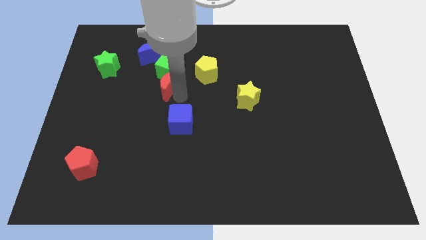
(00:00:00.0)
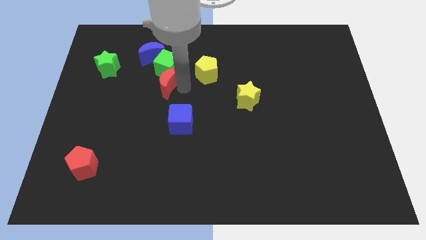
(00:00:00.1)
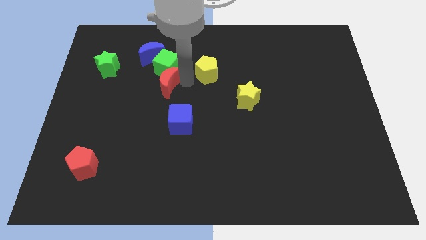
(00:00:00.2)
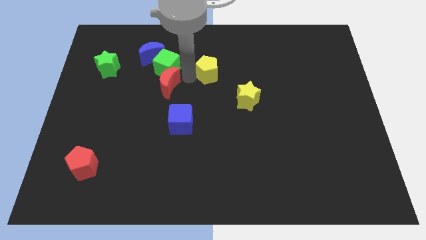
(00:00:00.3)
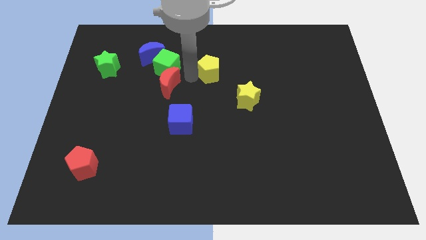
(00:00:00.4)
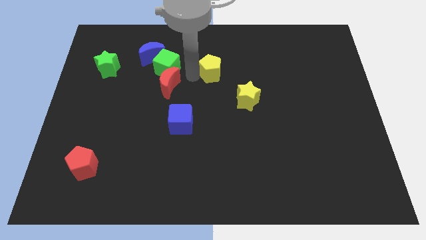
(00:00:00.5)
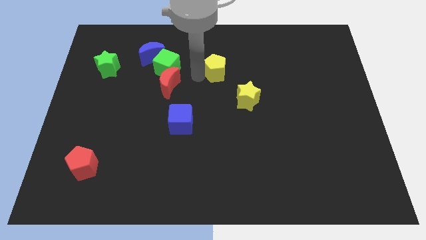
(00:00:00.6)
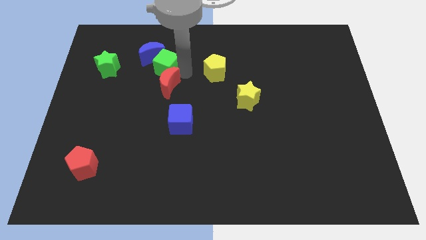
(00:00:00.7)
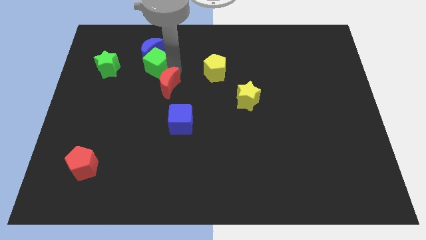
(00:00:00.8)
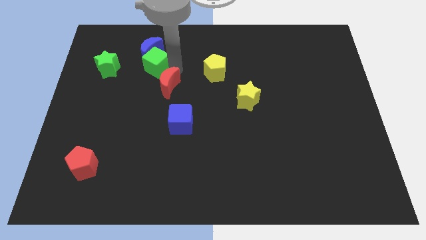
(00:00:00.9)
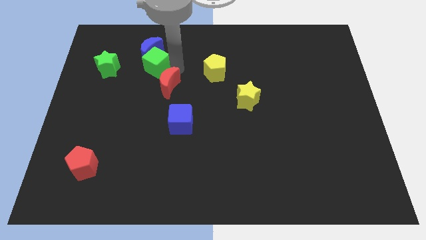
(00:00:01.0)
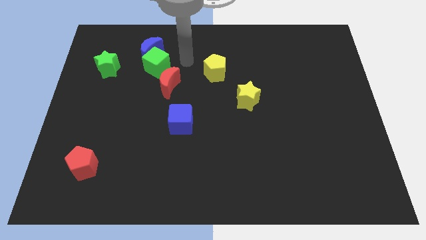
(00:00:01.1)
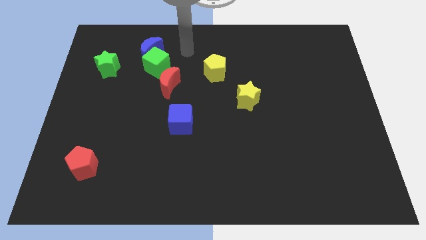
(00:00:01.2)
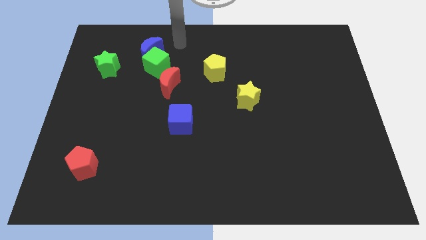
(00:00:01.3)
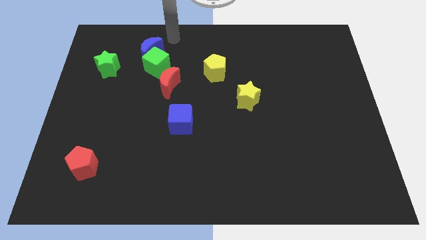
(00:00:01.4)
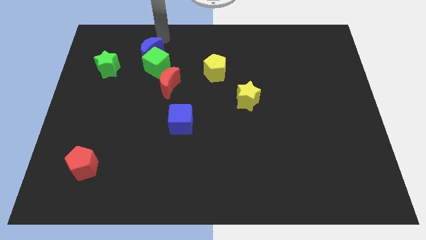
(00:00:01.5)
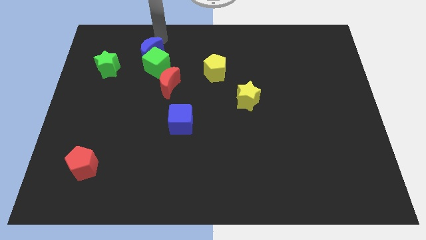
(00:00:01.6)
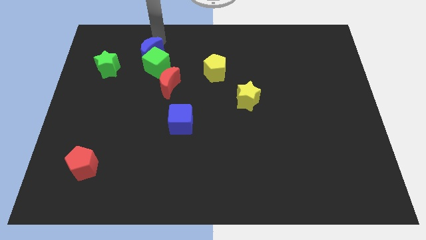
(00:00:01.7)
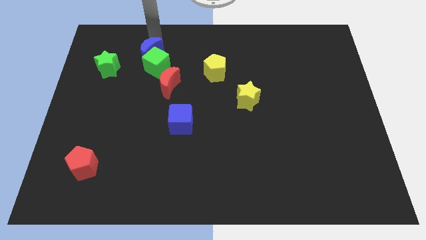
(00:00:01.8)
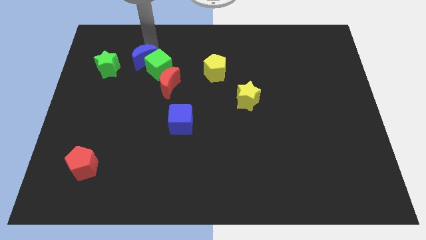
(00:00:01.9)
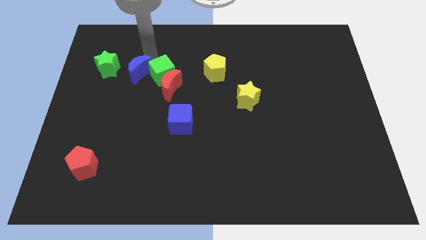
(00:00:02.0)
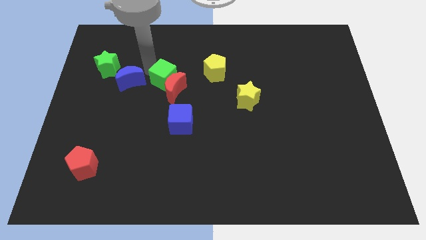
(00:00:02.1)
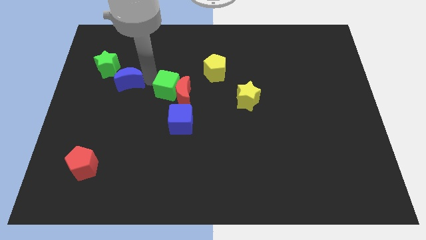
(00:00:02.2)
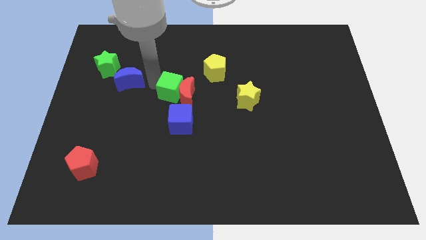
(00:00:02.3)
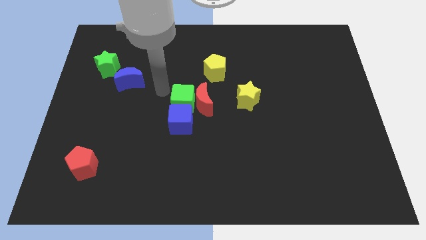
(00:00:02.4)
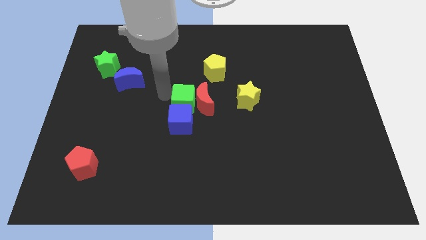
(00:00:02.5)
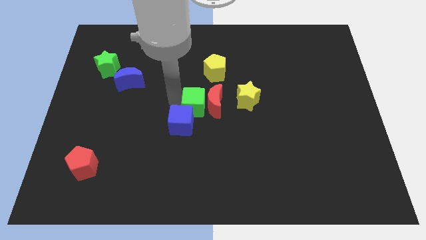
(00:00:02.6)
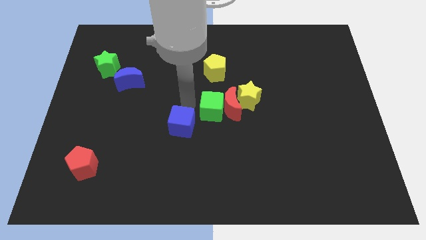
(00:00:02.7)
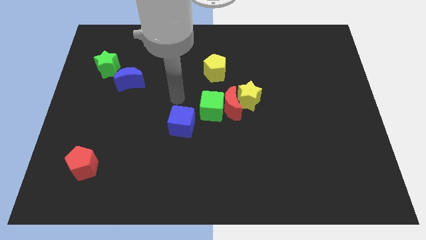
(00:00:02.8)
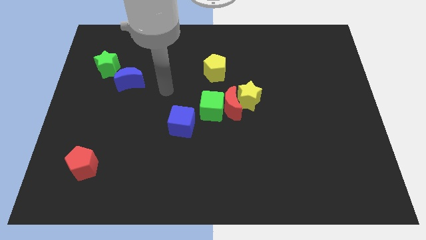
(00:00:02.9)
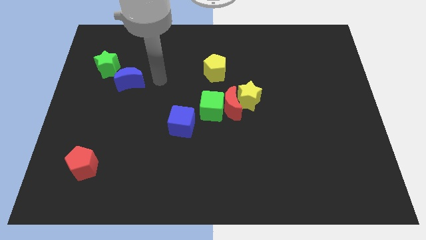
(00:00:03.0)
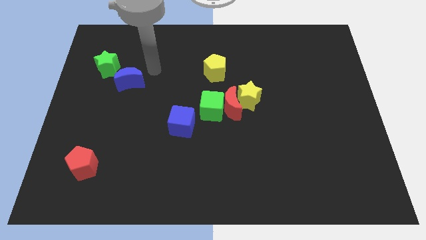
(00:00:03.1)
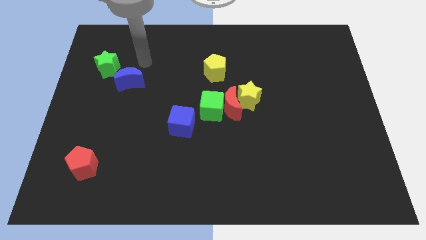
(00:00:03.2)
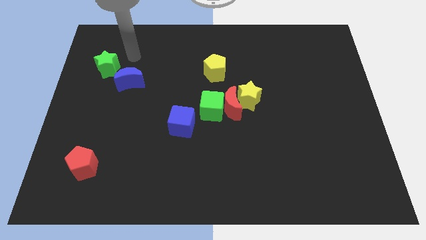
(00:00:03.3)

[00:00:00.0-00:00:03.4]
push the red crescent and the green cube into the yellow star

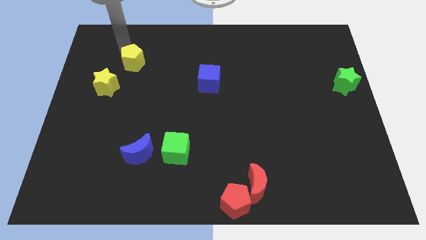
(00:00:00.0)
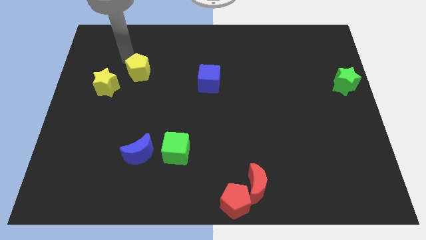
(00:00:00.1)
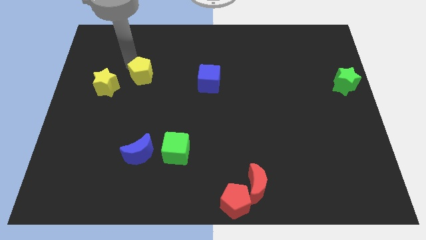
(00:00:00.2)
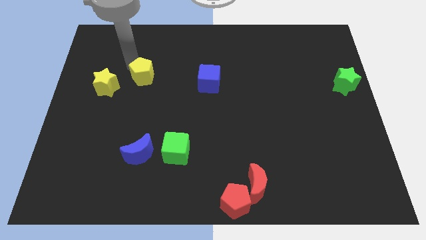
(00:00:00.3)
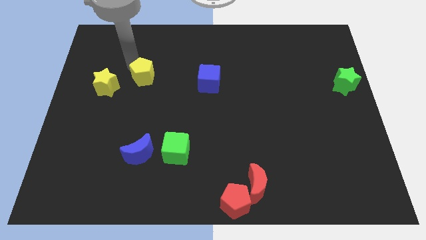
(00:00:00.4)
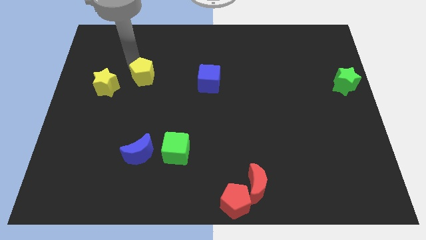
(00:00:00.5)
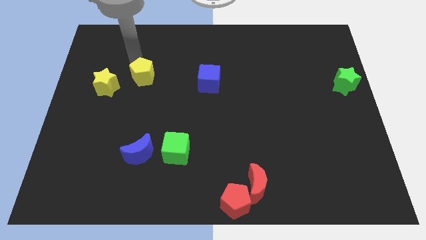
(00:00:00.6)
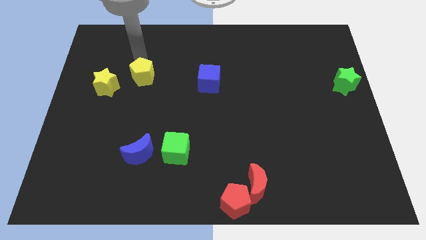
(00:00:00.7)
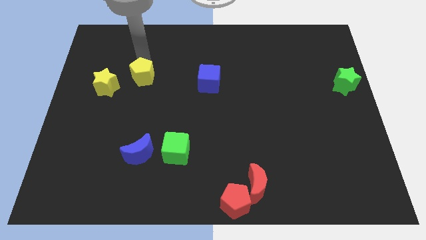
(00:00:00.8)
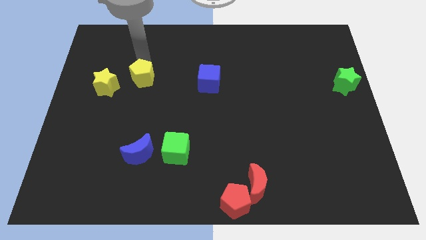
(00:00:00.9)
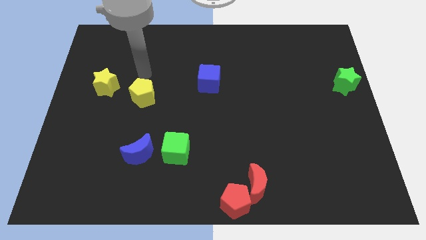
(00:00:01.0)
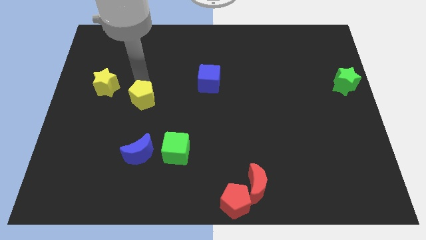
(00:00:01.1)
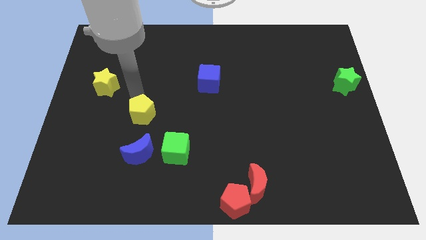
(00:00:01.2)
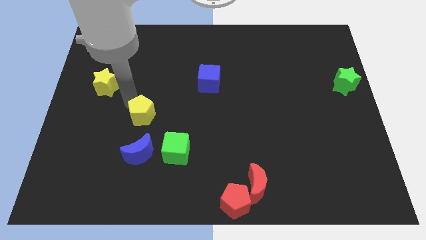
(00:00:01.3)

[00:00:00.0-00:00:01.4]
move the yellow pentagon towards the blue moon

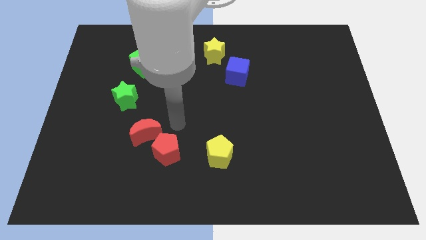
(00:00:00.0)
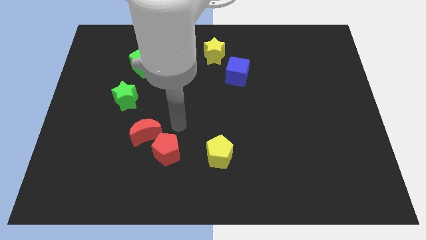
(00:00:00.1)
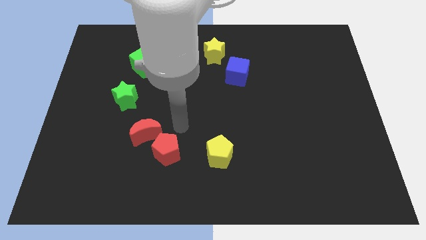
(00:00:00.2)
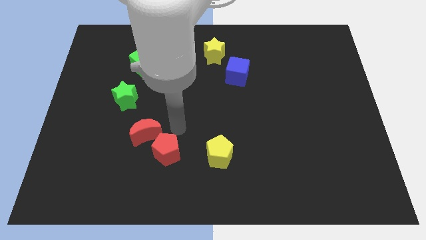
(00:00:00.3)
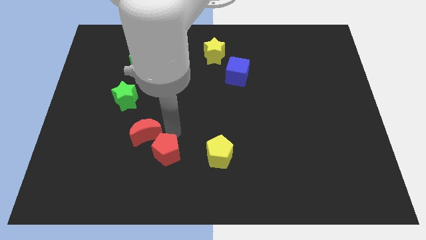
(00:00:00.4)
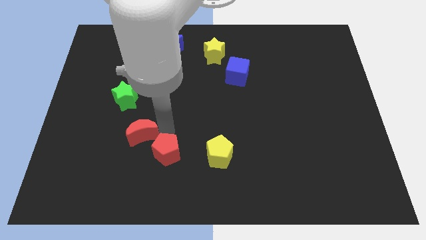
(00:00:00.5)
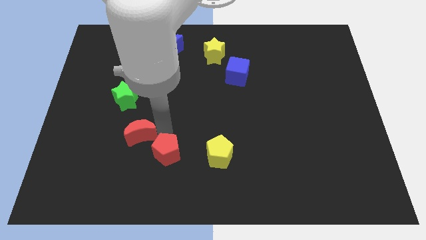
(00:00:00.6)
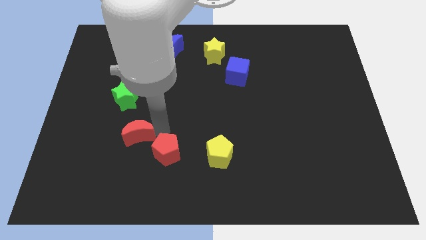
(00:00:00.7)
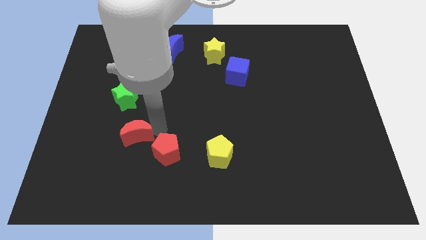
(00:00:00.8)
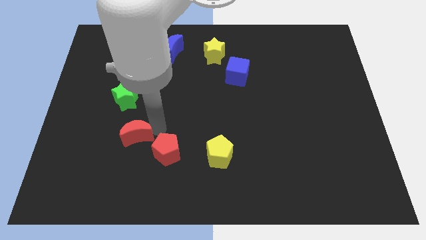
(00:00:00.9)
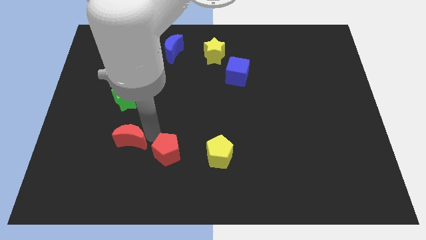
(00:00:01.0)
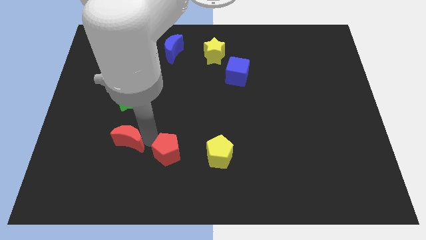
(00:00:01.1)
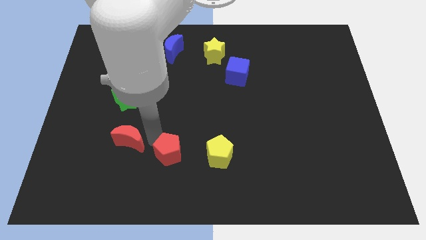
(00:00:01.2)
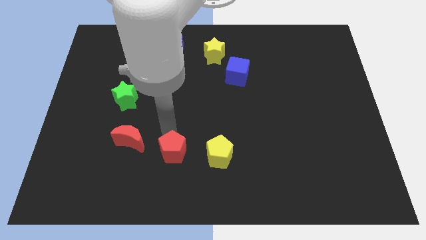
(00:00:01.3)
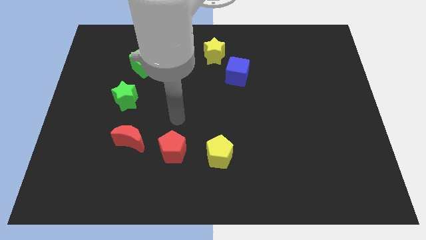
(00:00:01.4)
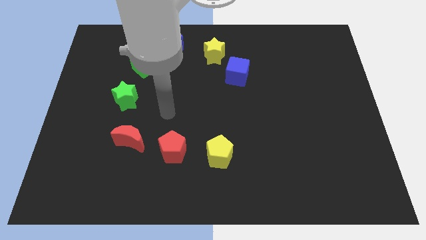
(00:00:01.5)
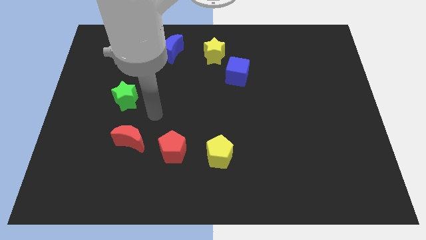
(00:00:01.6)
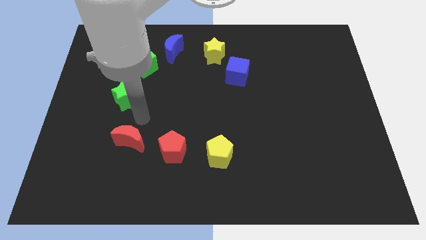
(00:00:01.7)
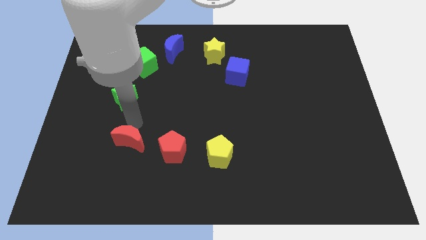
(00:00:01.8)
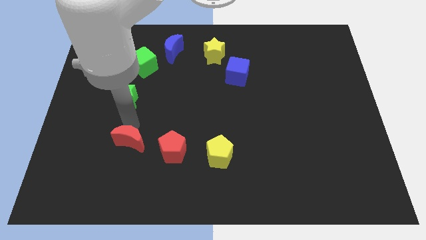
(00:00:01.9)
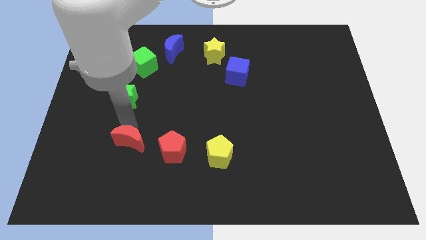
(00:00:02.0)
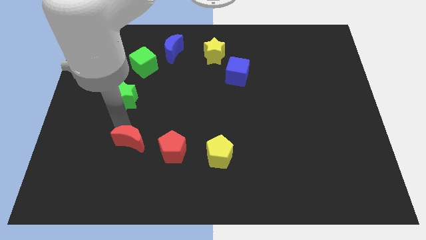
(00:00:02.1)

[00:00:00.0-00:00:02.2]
place red moon to the left of red pentagon

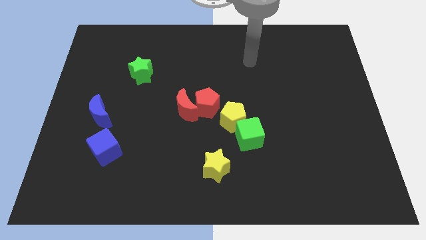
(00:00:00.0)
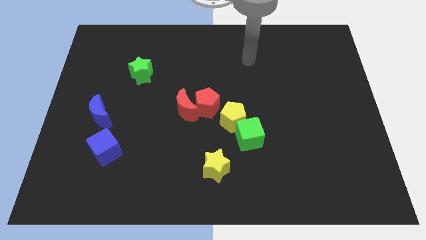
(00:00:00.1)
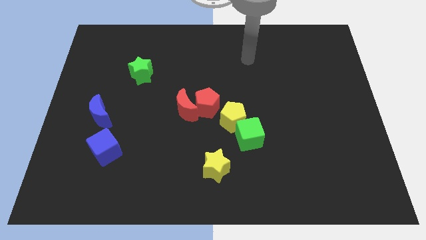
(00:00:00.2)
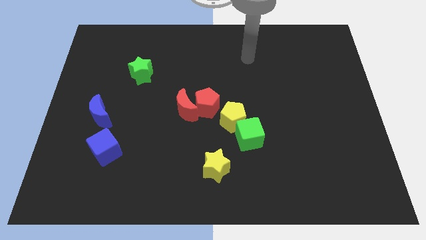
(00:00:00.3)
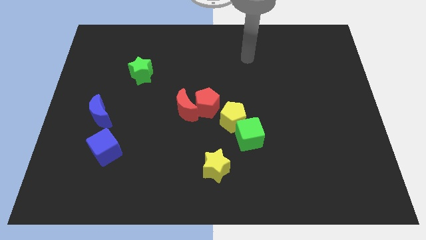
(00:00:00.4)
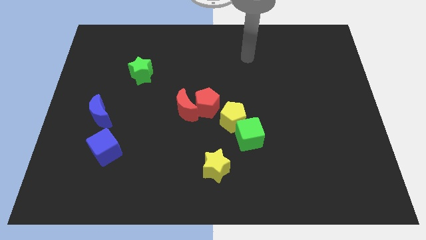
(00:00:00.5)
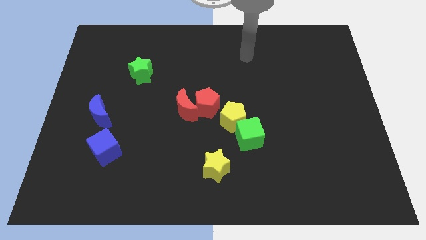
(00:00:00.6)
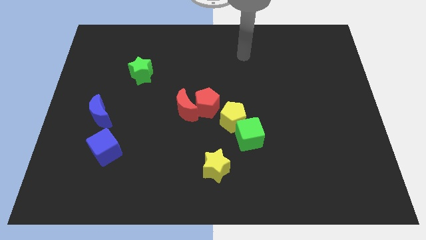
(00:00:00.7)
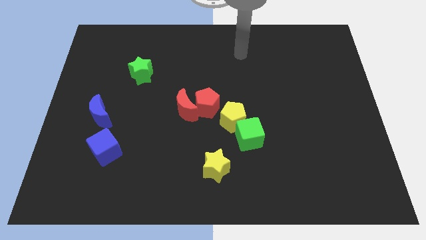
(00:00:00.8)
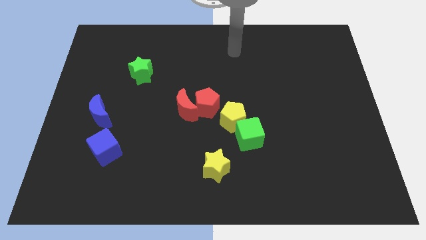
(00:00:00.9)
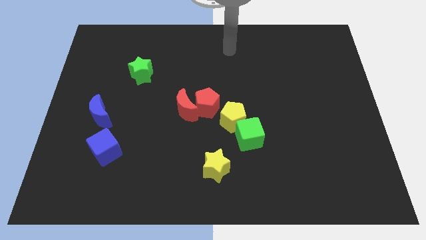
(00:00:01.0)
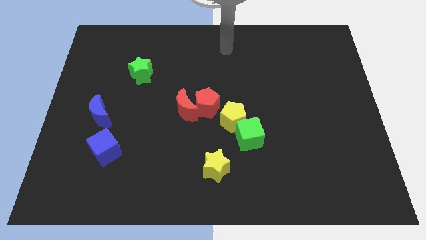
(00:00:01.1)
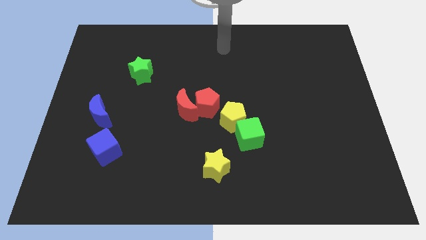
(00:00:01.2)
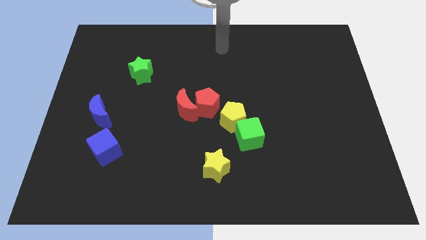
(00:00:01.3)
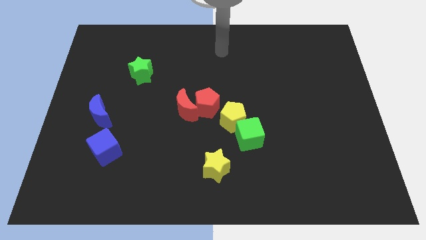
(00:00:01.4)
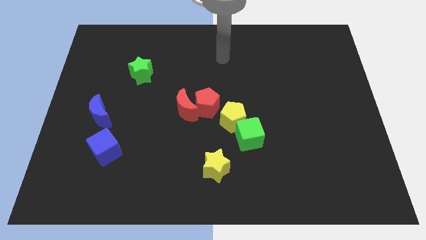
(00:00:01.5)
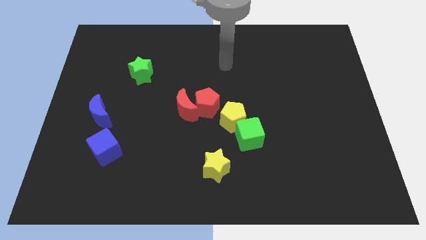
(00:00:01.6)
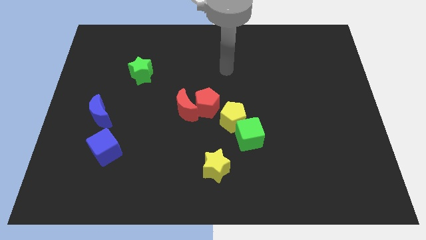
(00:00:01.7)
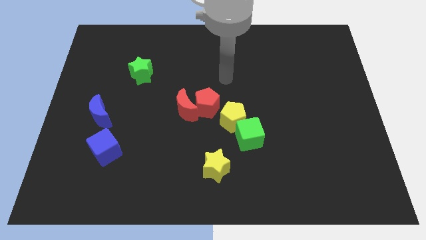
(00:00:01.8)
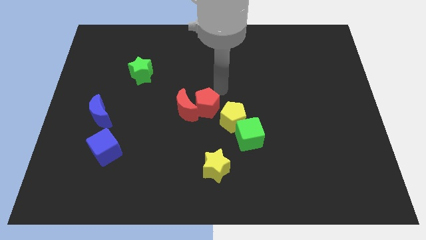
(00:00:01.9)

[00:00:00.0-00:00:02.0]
move your arm towards the red pentagon
